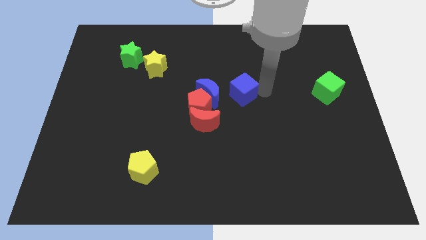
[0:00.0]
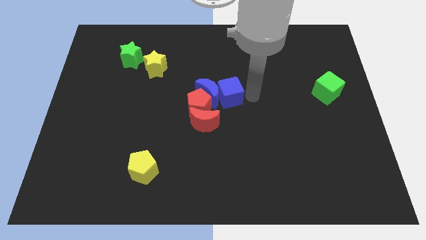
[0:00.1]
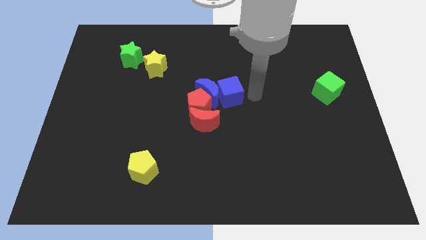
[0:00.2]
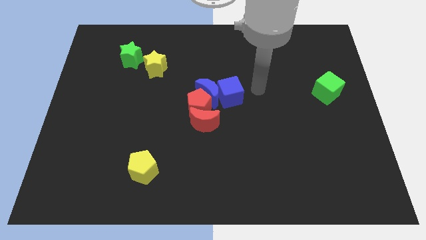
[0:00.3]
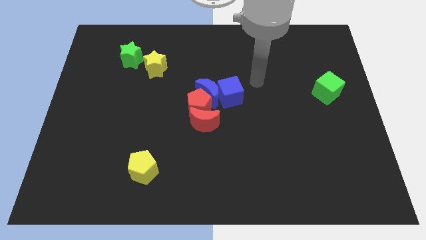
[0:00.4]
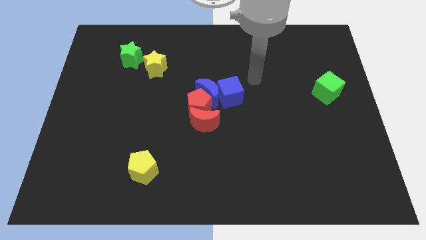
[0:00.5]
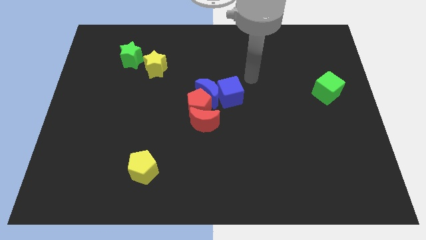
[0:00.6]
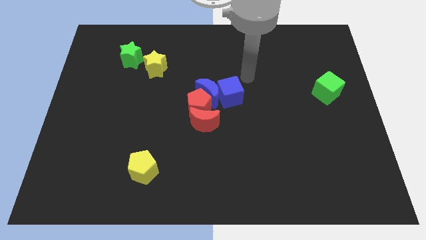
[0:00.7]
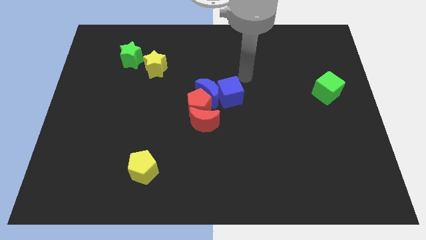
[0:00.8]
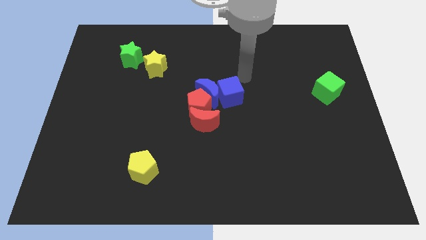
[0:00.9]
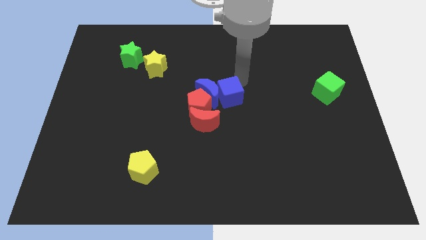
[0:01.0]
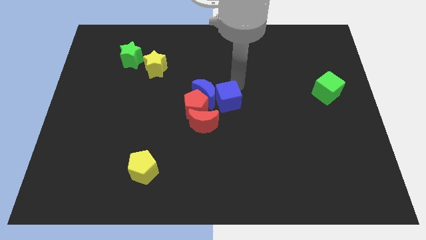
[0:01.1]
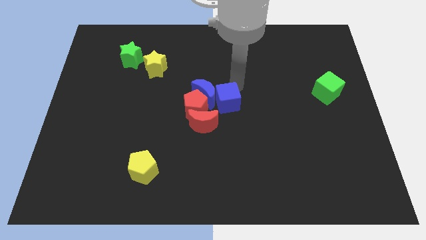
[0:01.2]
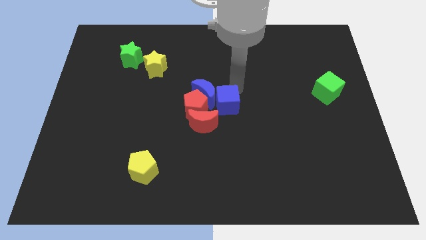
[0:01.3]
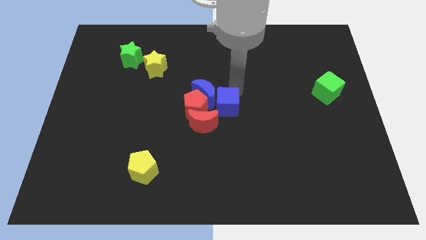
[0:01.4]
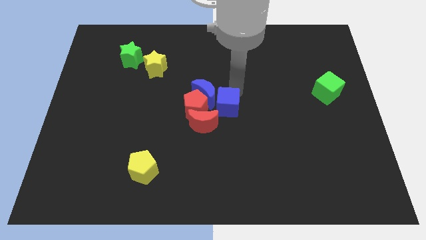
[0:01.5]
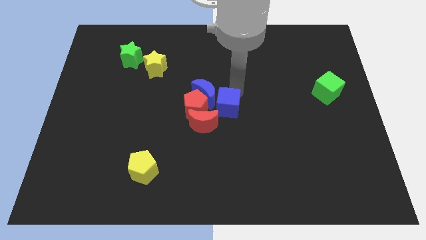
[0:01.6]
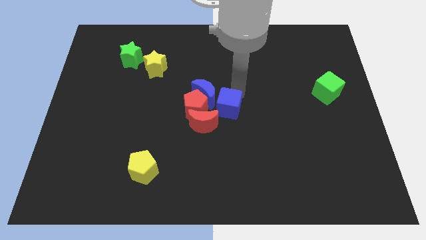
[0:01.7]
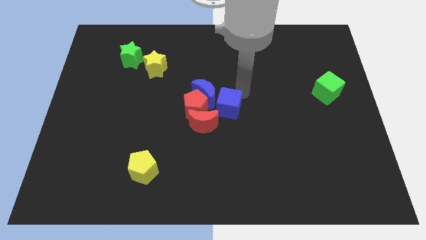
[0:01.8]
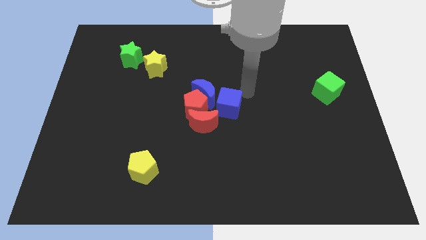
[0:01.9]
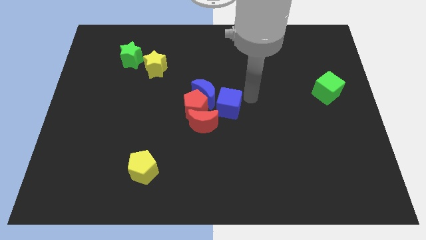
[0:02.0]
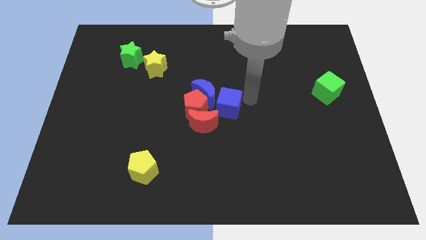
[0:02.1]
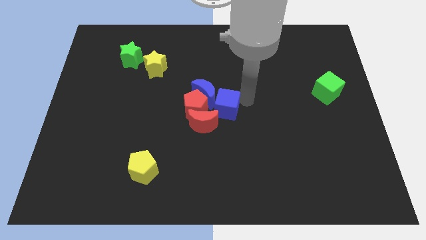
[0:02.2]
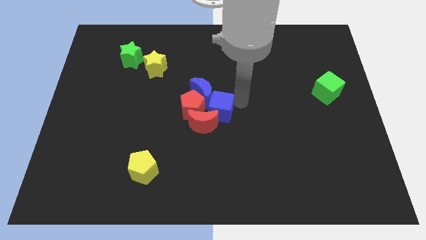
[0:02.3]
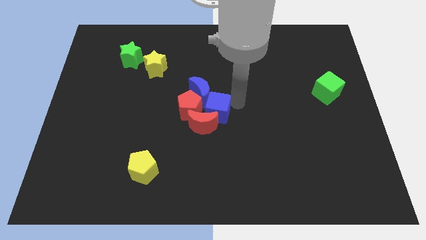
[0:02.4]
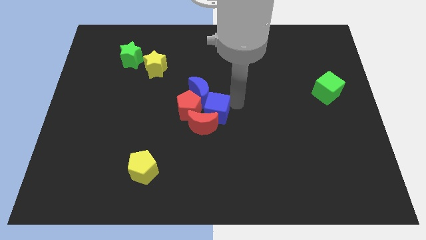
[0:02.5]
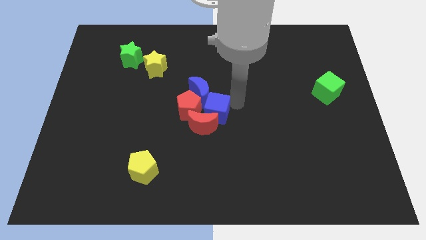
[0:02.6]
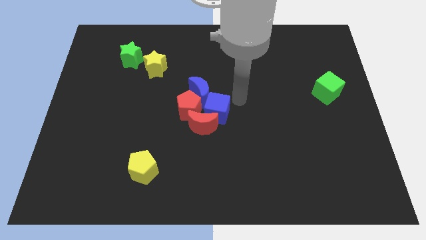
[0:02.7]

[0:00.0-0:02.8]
push the blue cube close to the right side of the red pentagon

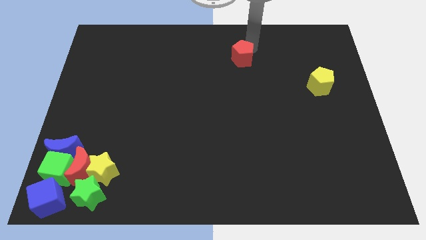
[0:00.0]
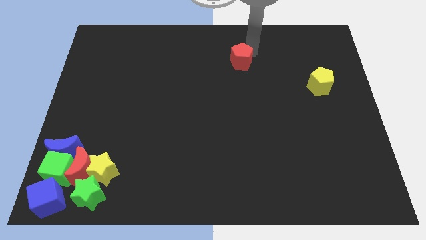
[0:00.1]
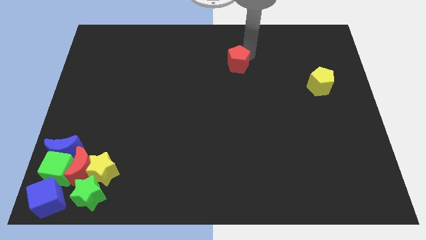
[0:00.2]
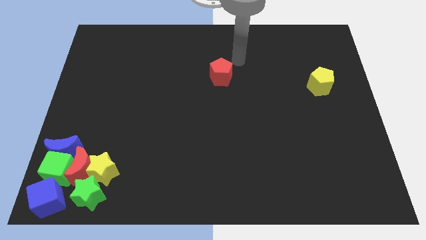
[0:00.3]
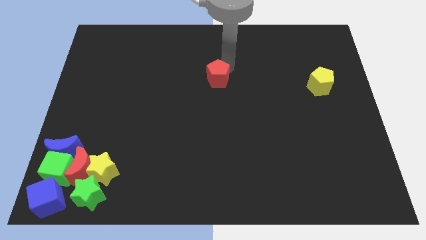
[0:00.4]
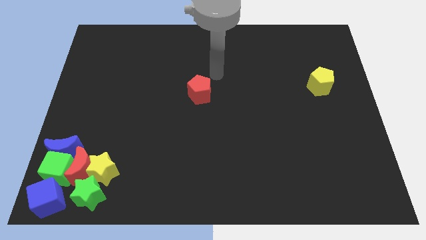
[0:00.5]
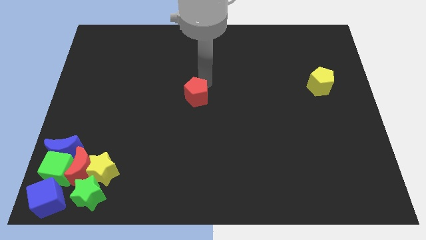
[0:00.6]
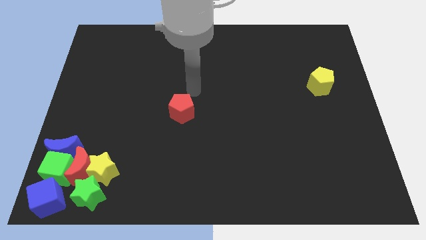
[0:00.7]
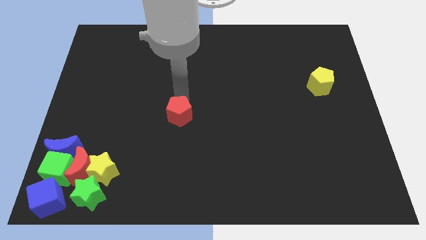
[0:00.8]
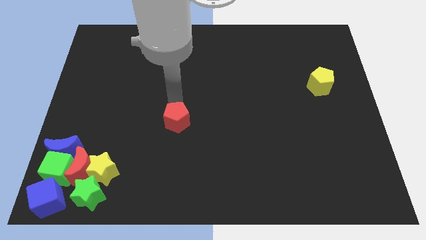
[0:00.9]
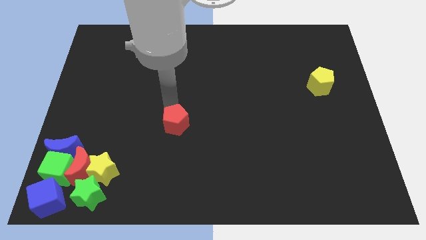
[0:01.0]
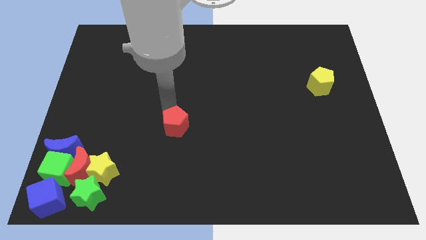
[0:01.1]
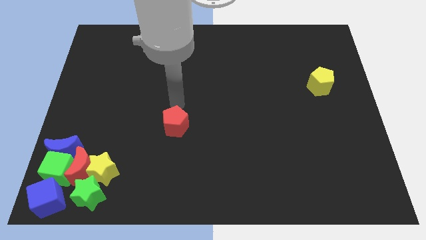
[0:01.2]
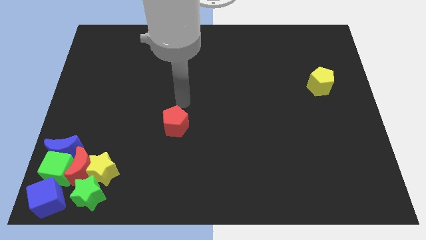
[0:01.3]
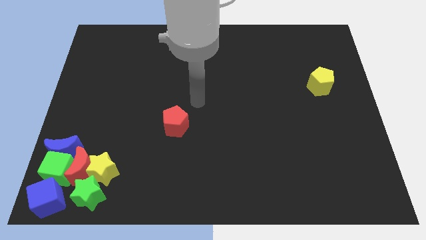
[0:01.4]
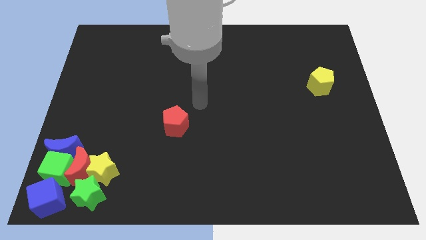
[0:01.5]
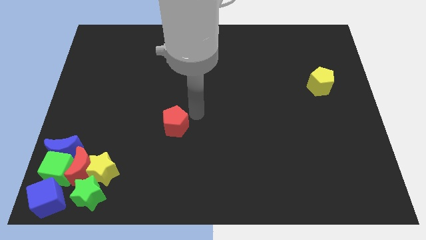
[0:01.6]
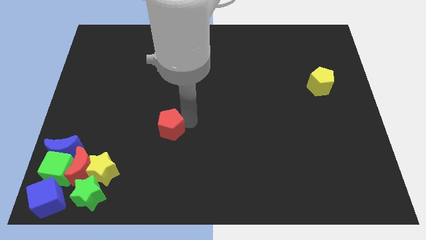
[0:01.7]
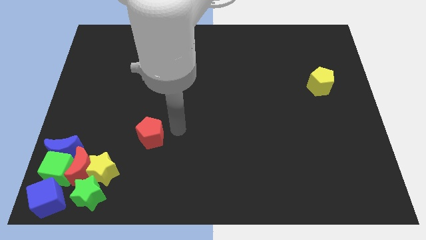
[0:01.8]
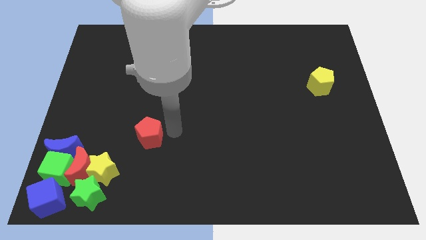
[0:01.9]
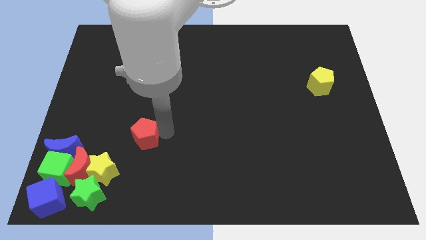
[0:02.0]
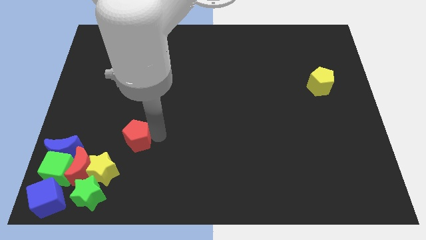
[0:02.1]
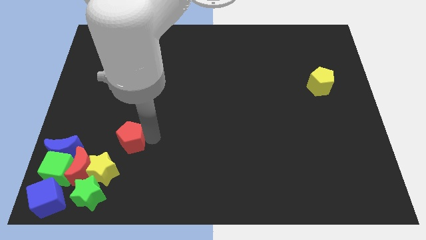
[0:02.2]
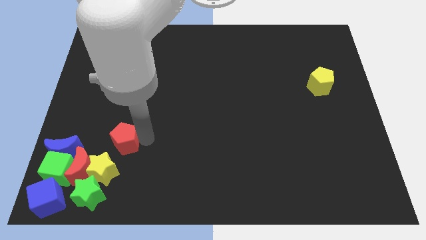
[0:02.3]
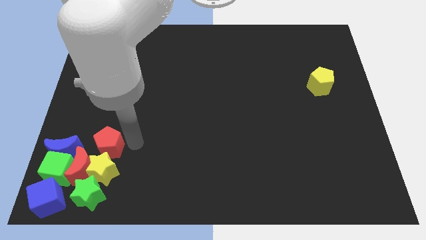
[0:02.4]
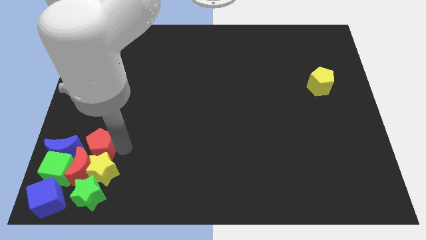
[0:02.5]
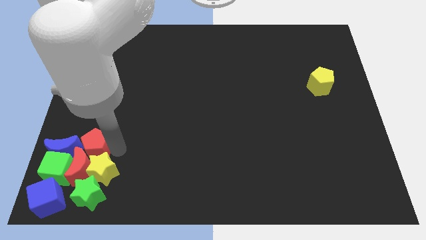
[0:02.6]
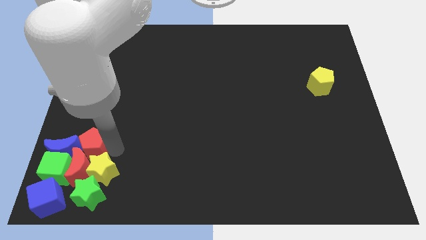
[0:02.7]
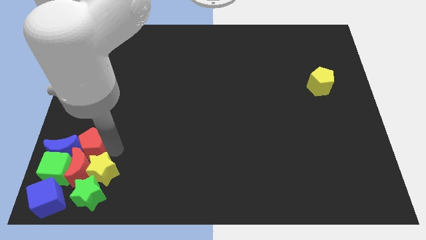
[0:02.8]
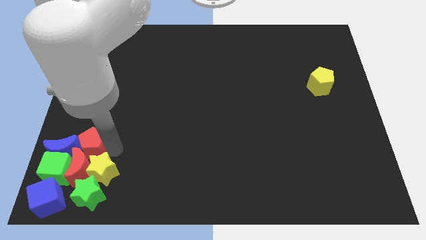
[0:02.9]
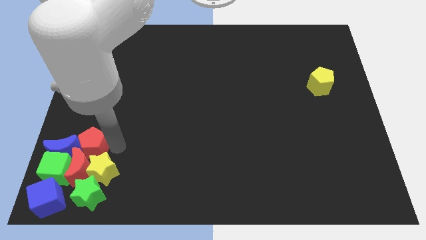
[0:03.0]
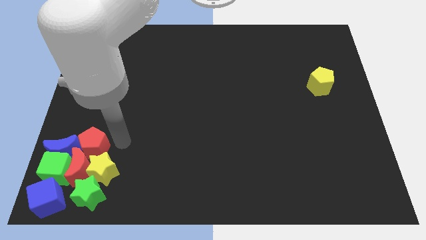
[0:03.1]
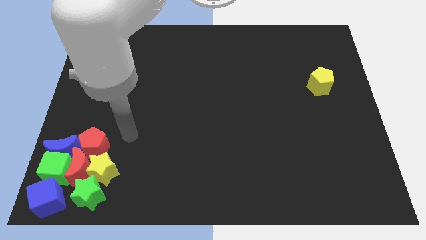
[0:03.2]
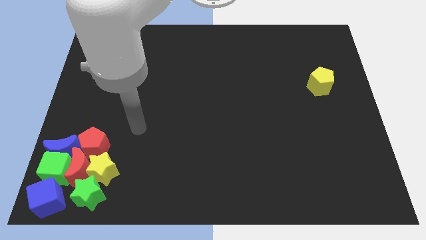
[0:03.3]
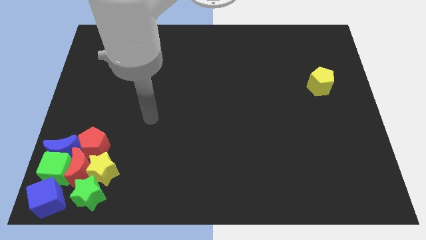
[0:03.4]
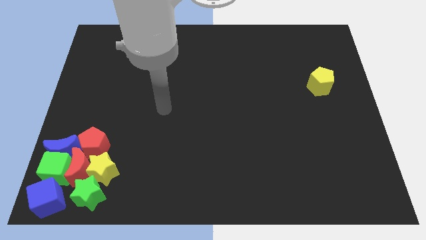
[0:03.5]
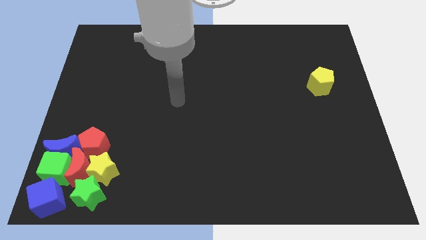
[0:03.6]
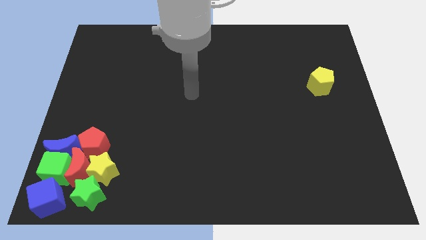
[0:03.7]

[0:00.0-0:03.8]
drag red pentagon to the right of blue moon

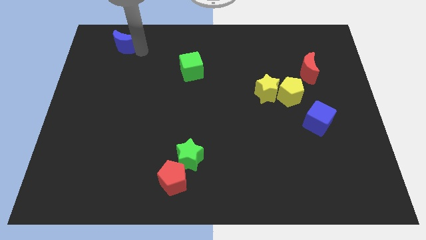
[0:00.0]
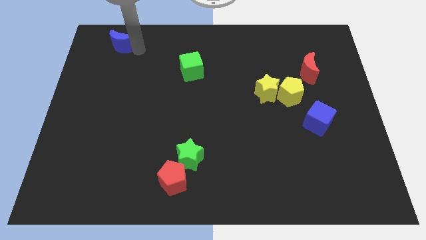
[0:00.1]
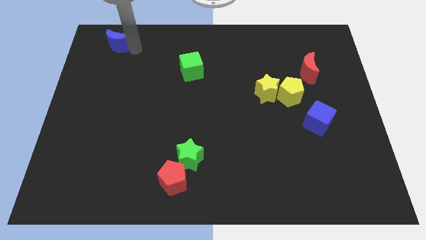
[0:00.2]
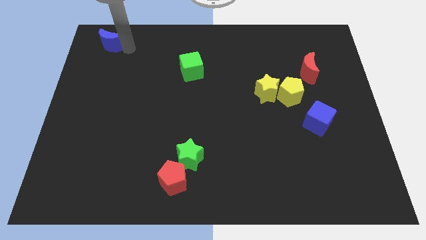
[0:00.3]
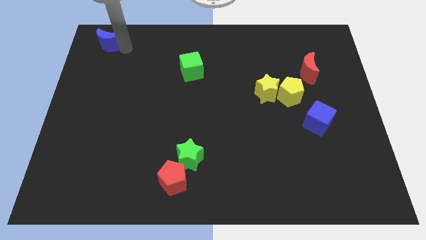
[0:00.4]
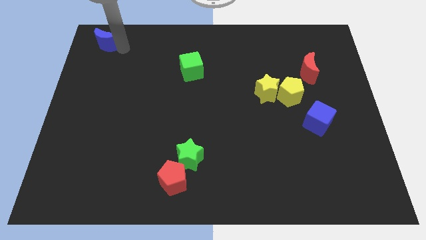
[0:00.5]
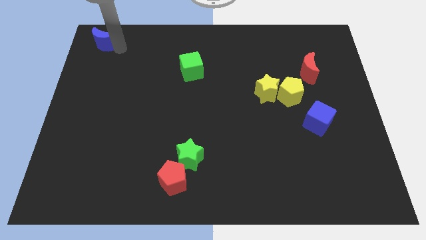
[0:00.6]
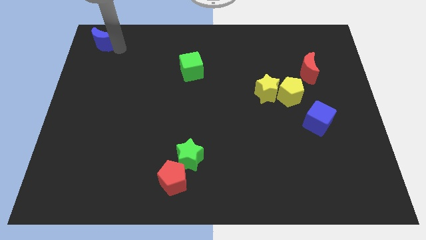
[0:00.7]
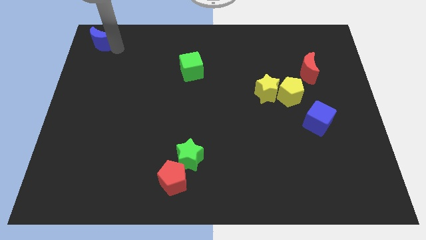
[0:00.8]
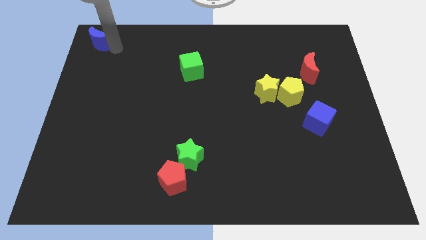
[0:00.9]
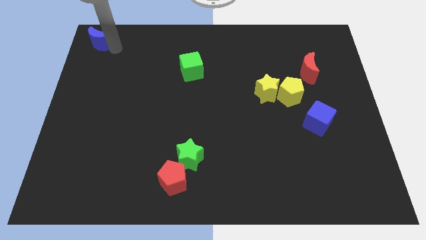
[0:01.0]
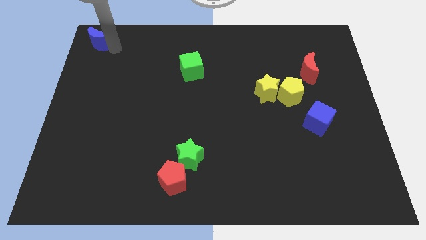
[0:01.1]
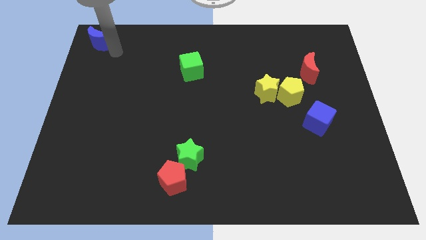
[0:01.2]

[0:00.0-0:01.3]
place the blue cube on the top left corner

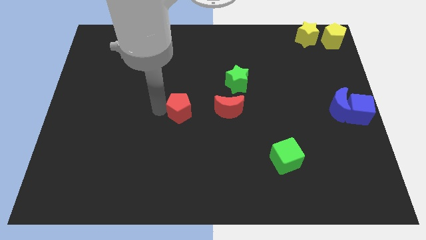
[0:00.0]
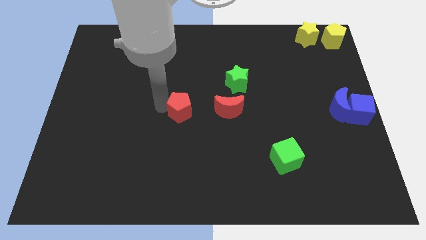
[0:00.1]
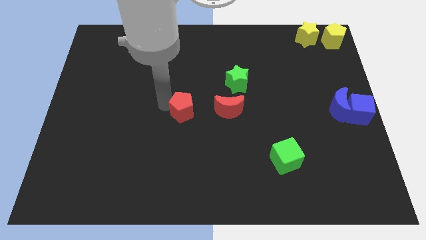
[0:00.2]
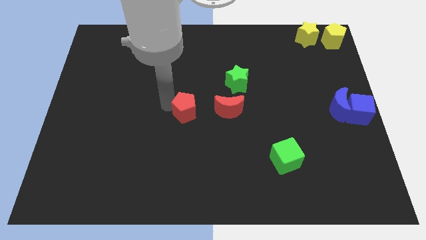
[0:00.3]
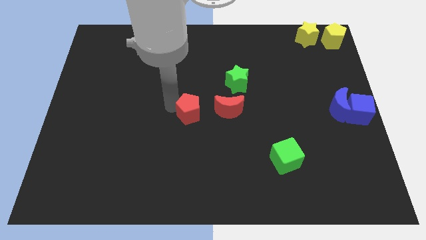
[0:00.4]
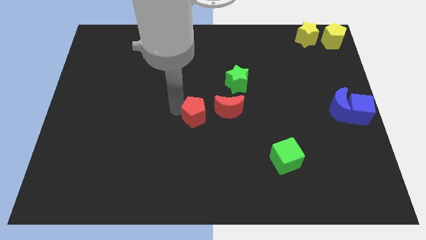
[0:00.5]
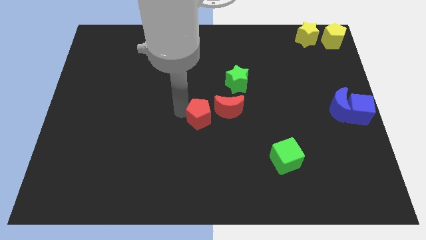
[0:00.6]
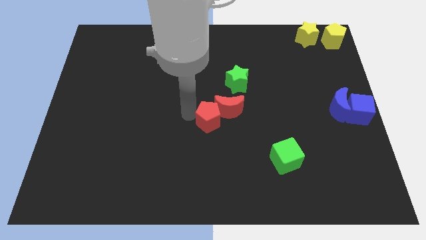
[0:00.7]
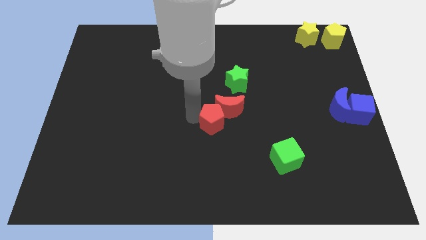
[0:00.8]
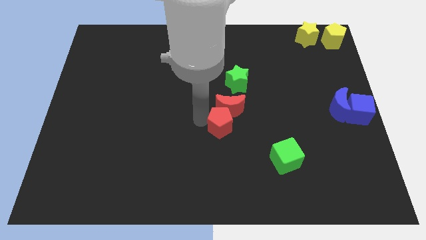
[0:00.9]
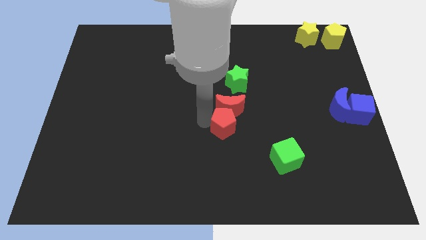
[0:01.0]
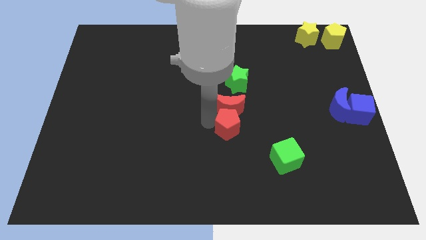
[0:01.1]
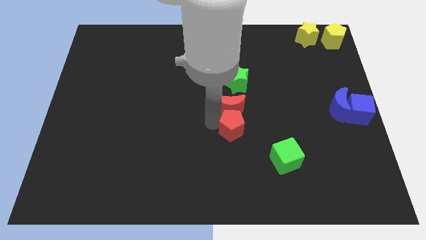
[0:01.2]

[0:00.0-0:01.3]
move the red pentagon to the bottom side of the red moon
